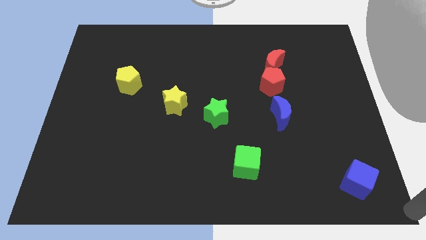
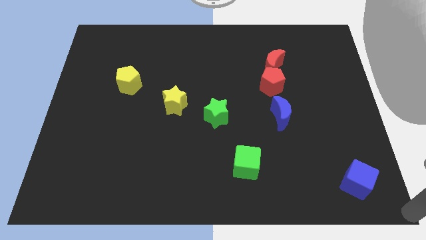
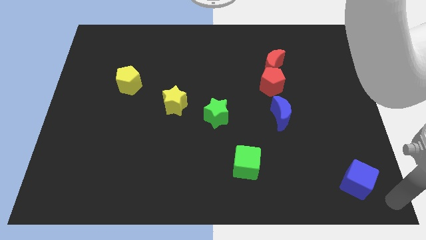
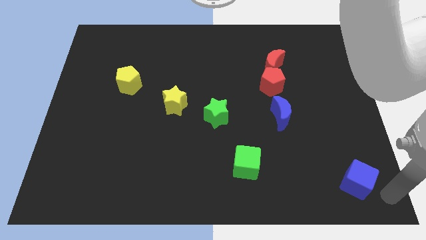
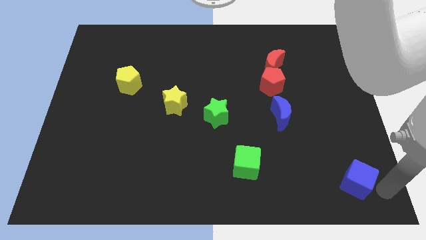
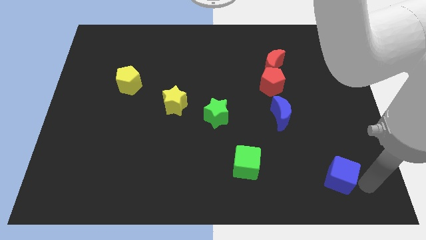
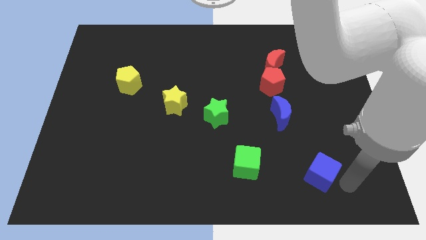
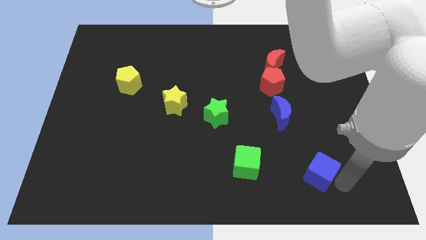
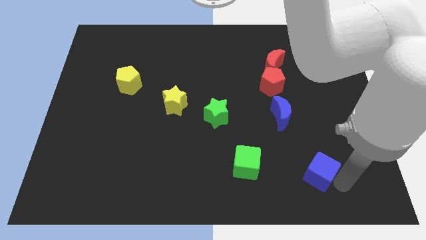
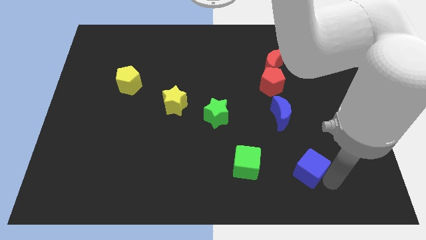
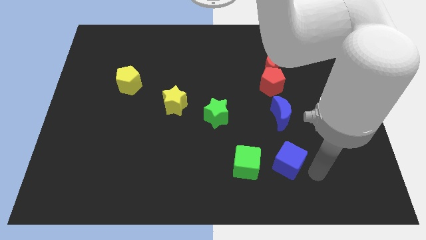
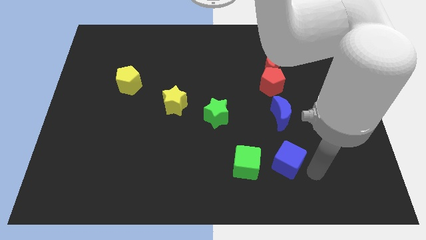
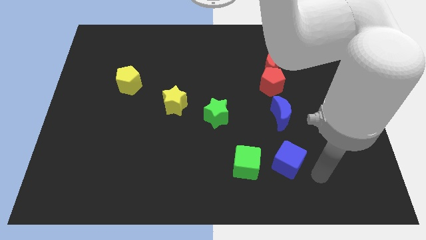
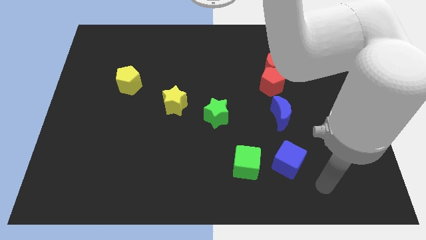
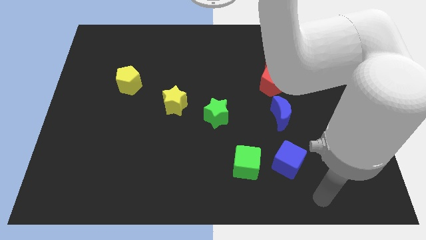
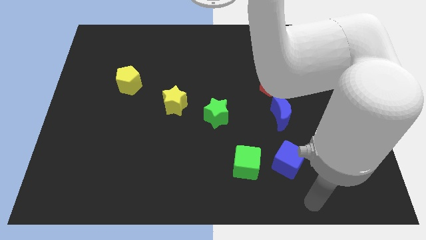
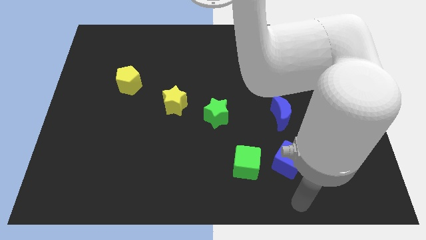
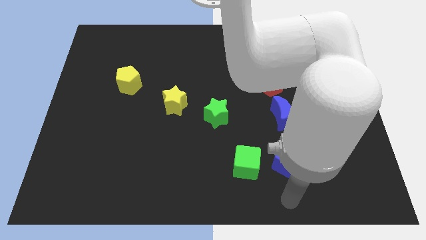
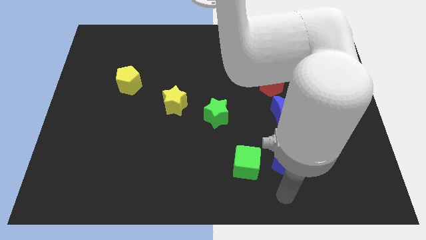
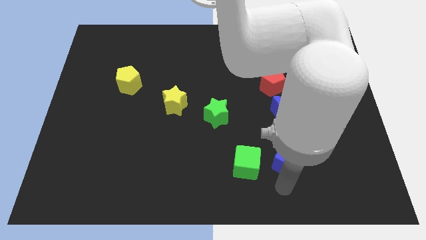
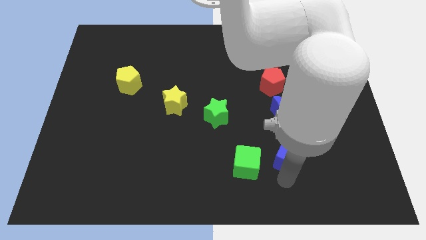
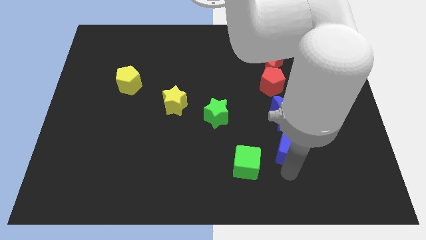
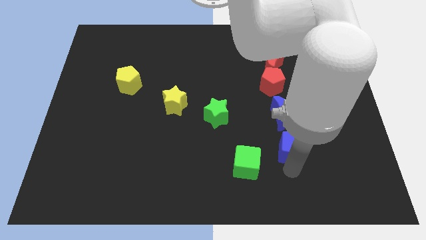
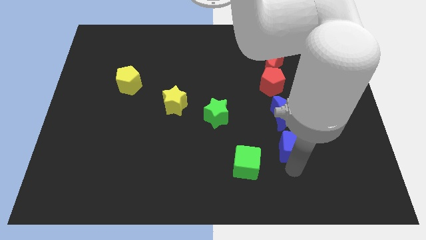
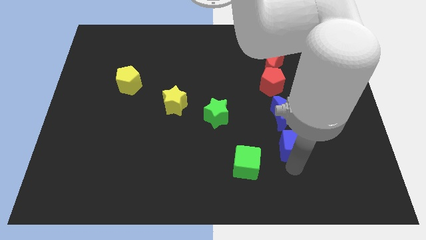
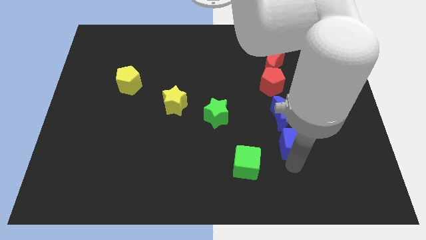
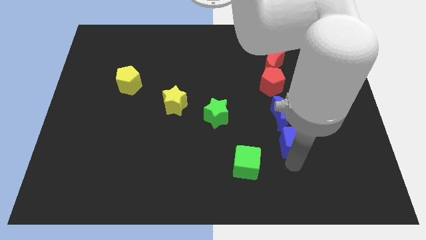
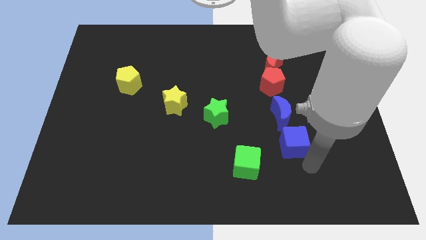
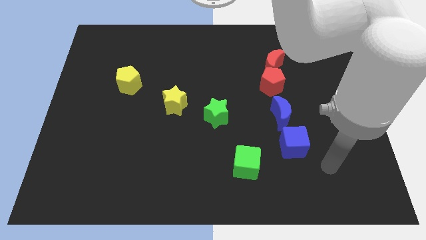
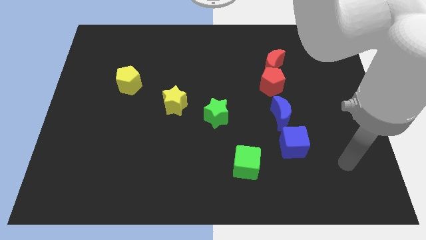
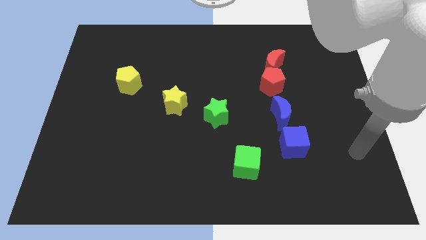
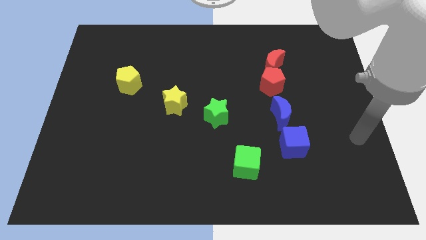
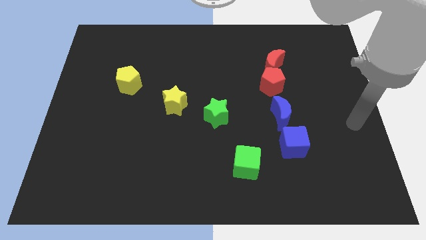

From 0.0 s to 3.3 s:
push the blue cube vertically to blue moon

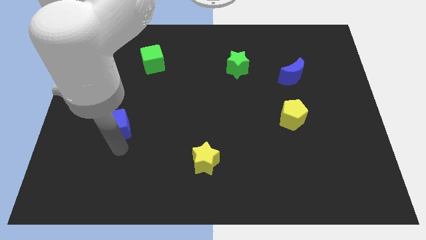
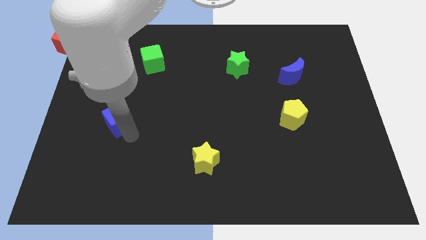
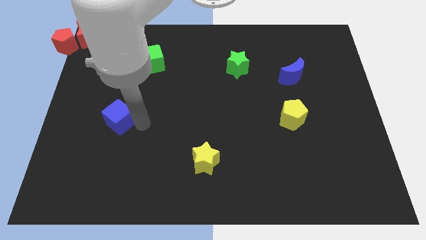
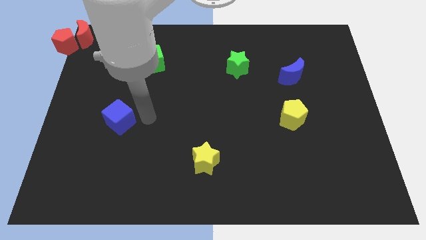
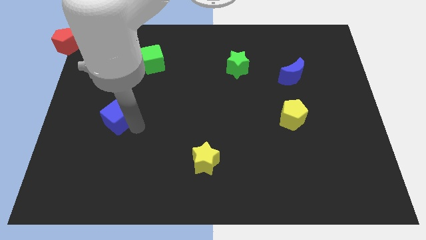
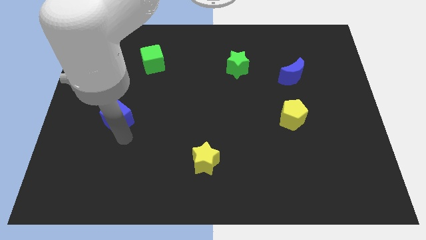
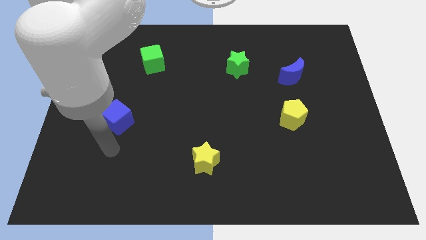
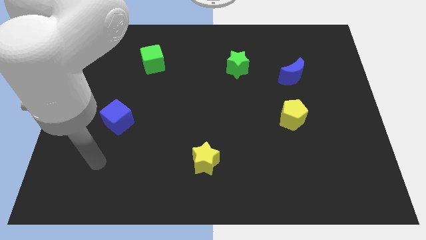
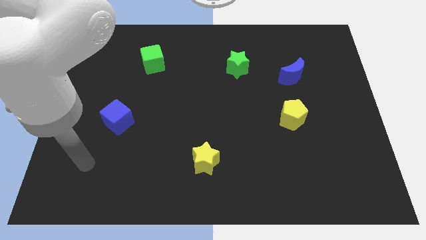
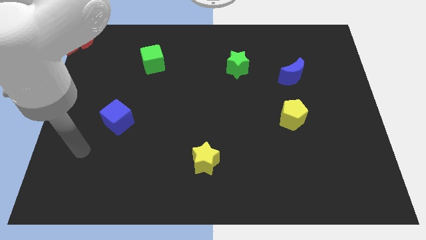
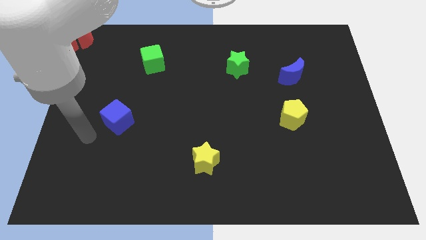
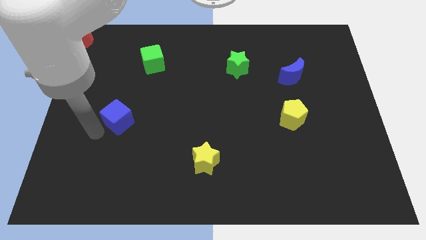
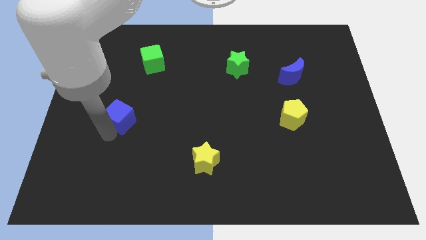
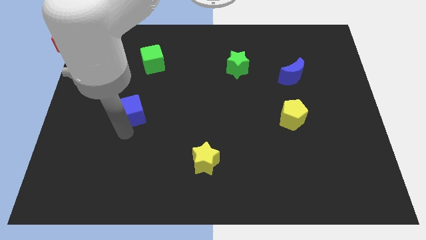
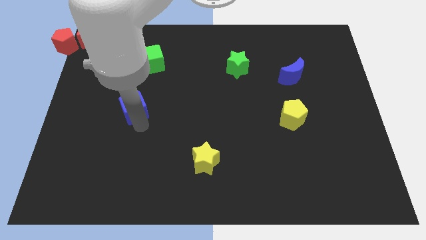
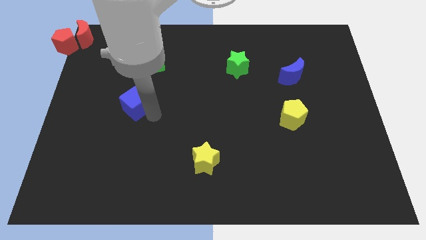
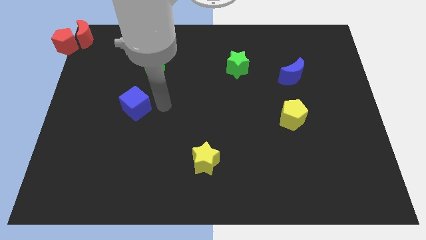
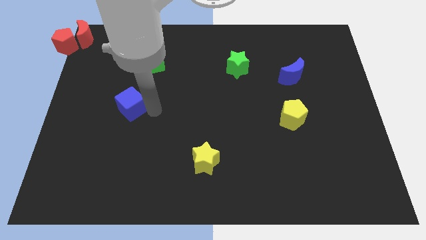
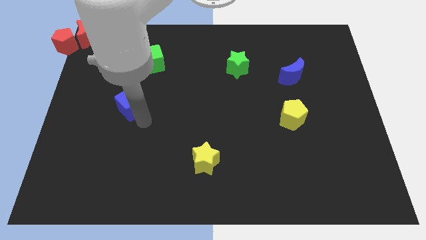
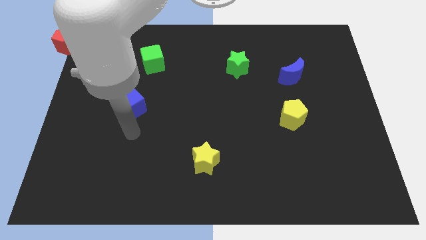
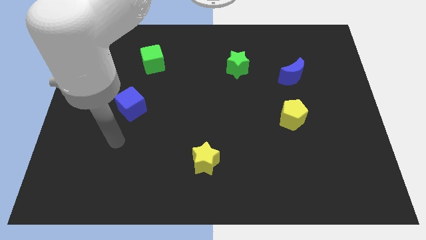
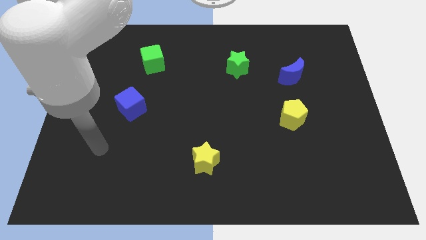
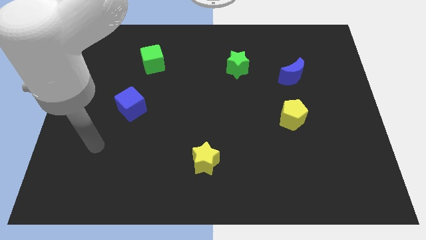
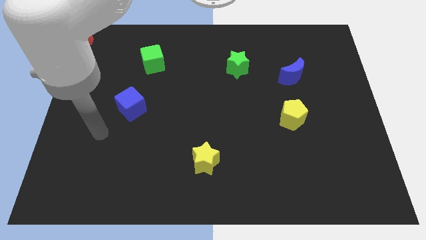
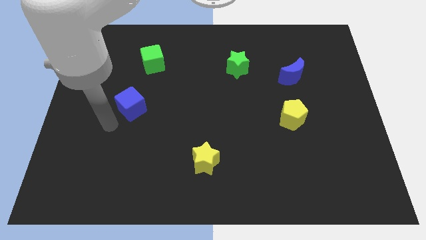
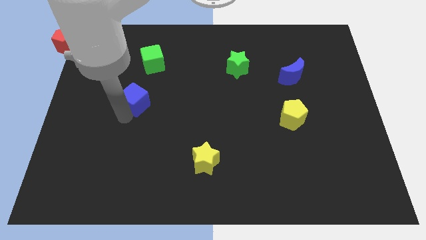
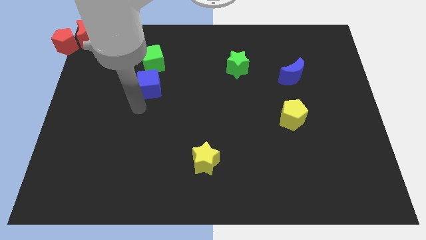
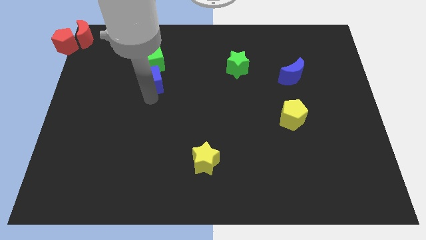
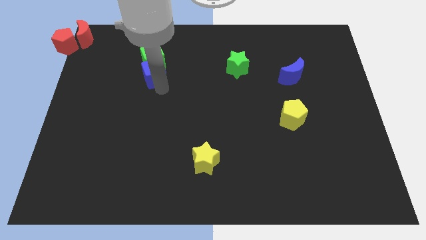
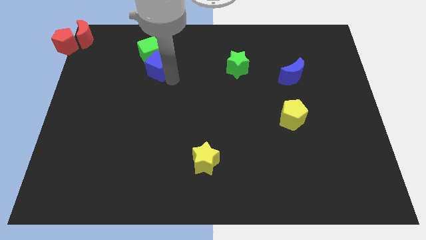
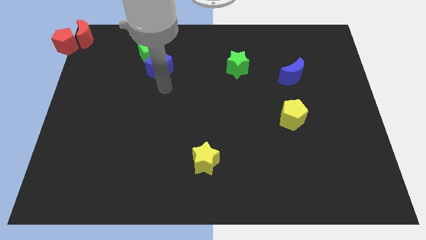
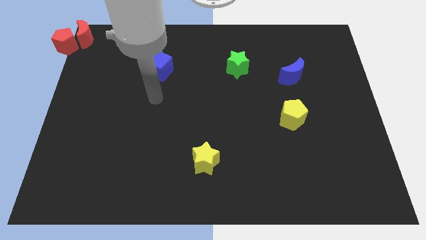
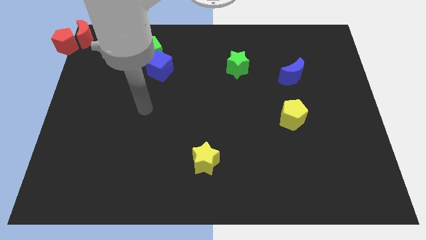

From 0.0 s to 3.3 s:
slide the blue cube to the bottom of the green cube

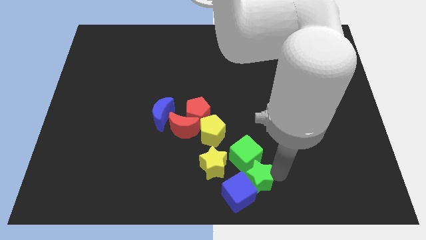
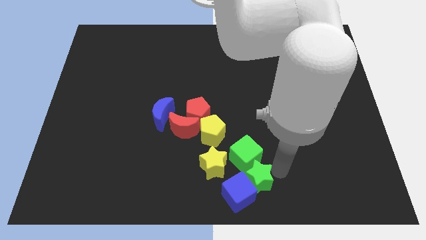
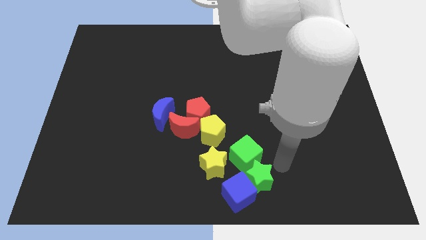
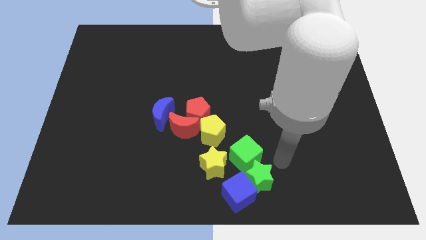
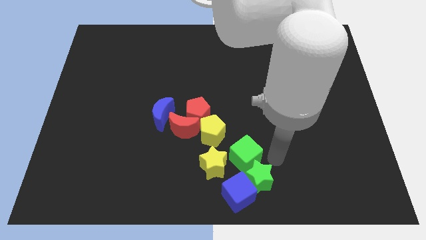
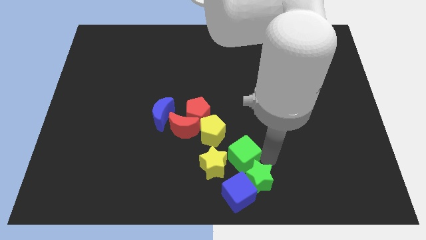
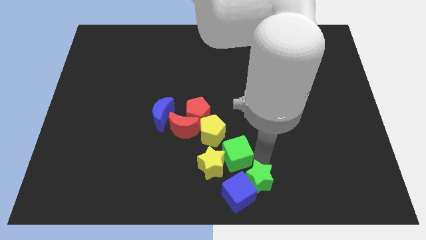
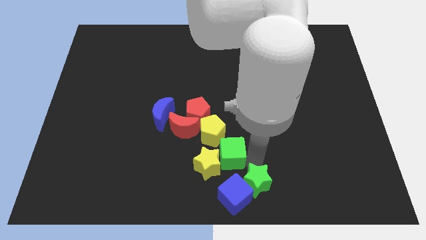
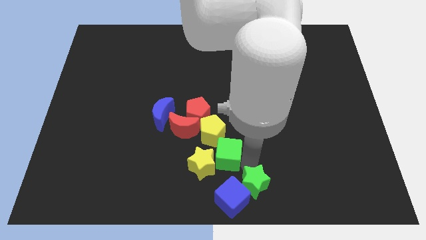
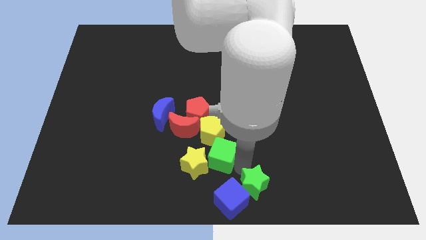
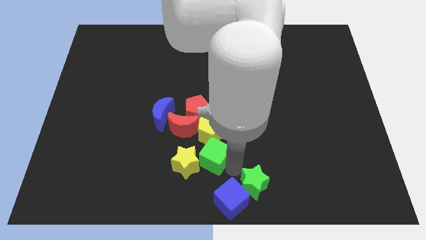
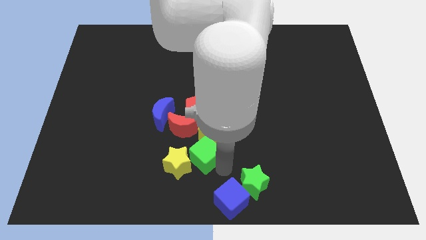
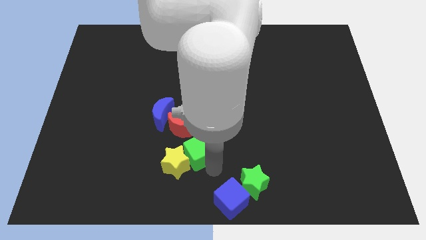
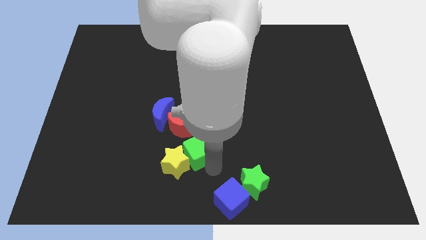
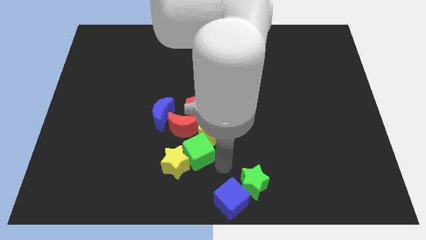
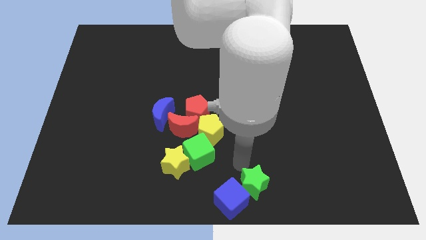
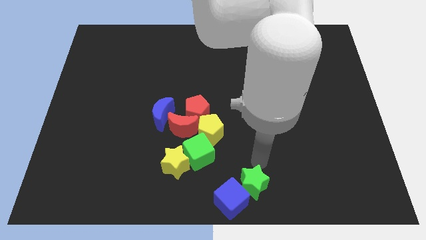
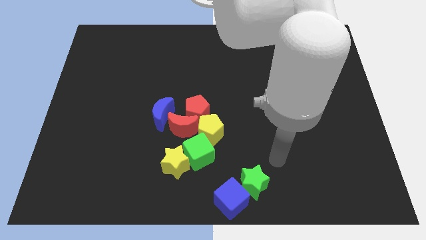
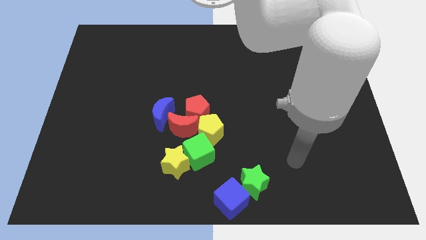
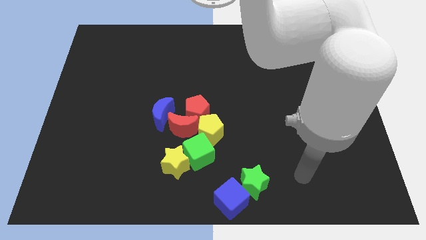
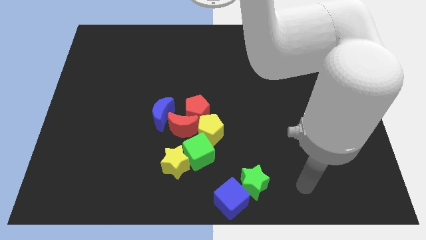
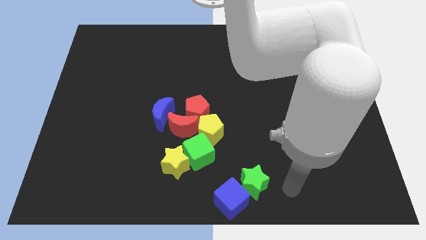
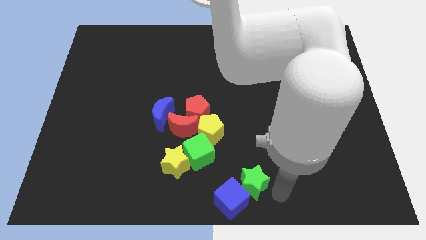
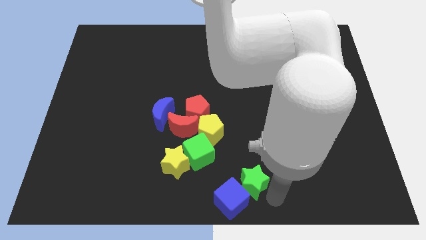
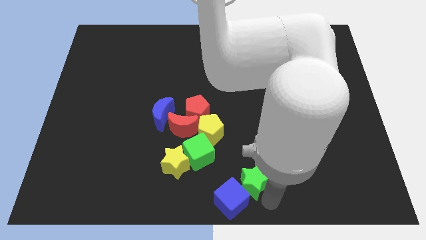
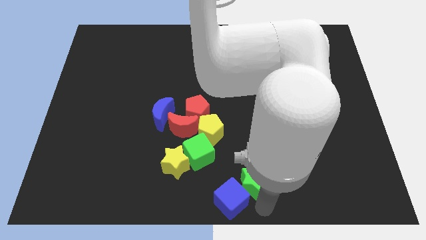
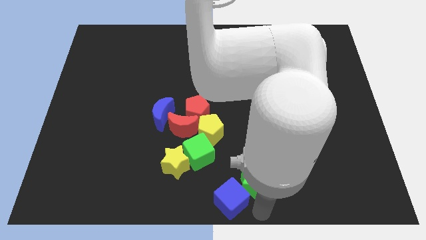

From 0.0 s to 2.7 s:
move the green cube to the right of the yellow star
